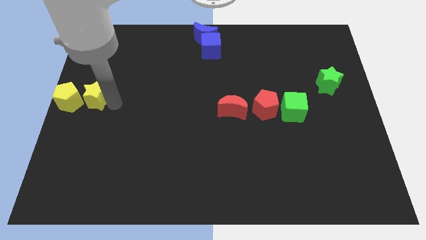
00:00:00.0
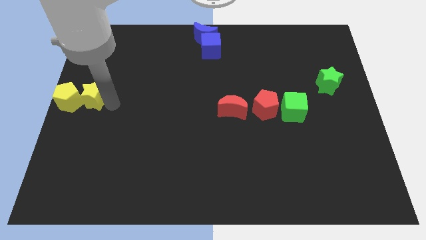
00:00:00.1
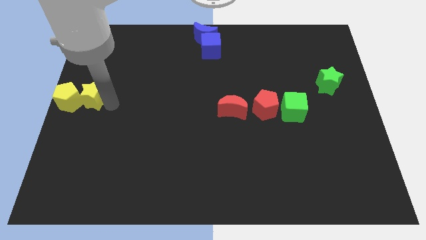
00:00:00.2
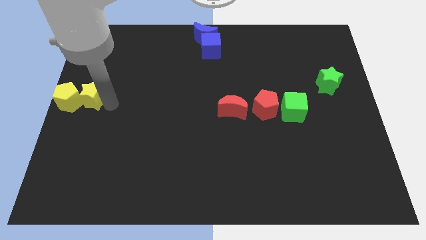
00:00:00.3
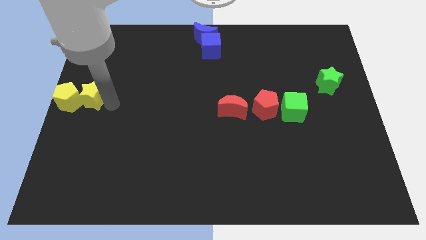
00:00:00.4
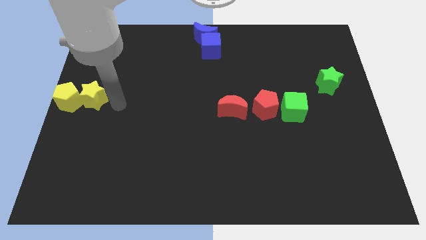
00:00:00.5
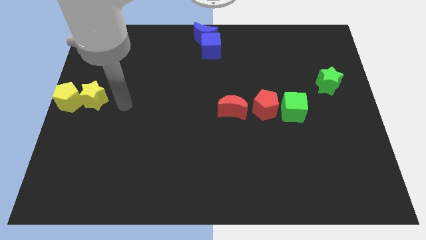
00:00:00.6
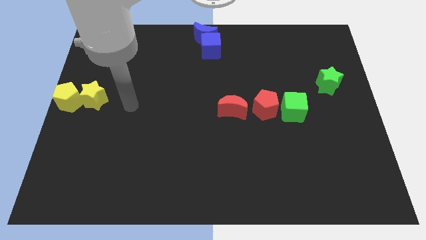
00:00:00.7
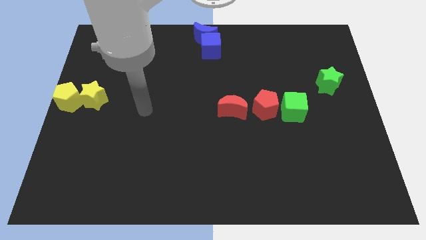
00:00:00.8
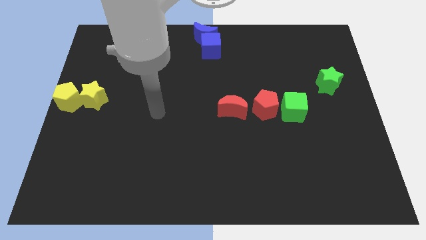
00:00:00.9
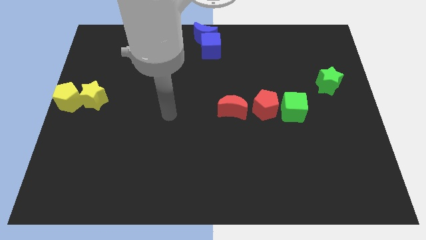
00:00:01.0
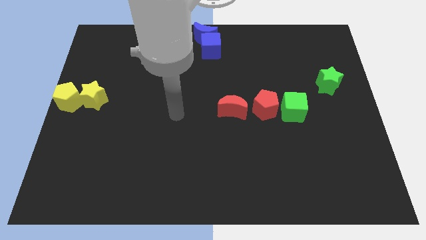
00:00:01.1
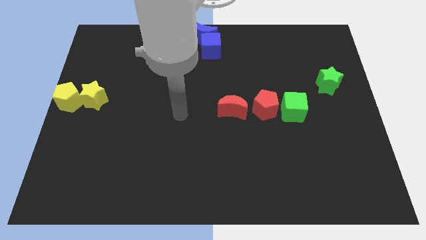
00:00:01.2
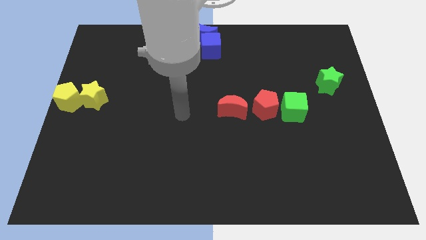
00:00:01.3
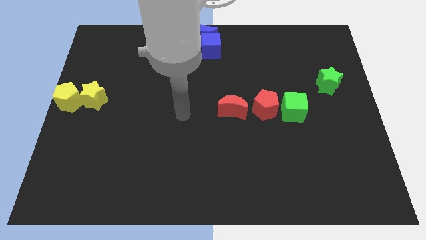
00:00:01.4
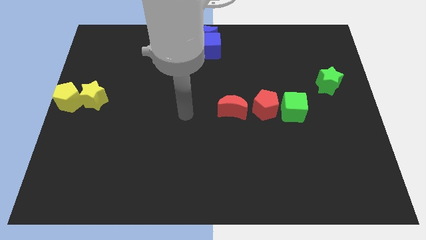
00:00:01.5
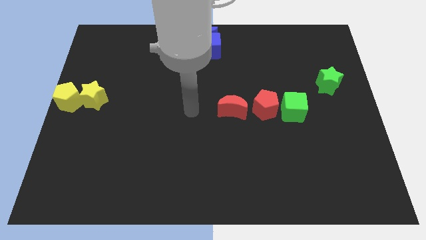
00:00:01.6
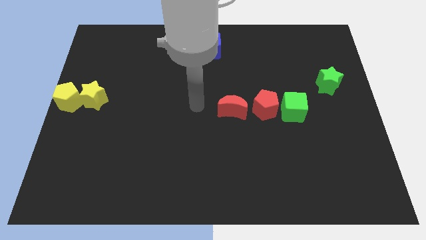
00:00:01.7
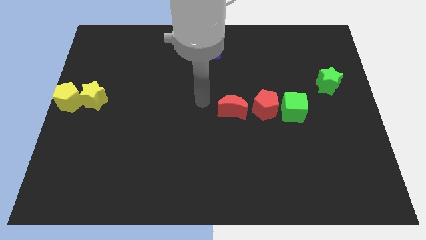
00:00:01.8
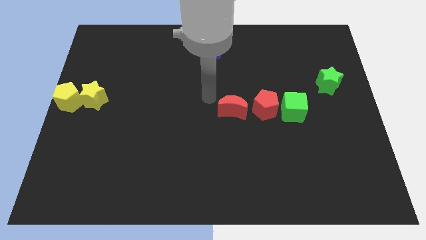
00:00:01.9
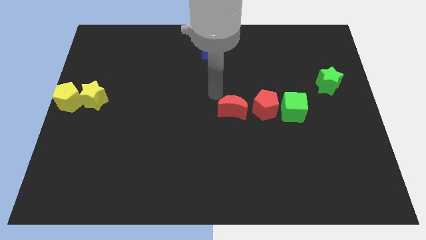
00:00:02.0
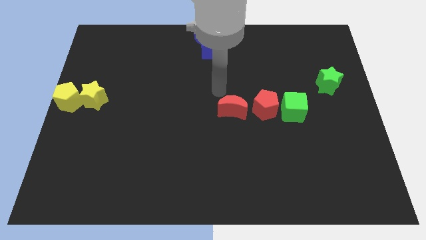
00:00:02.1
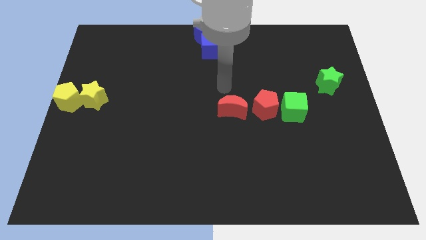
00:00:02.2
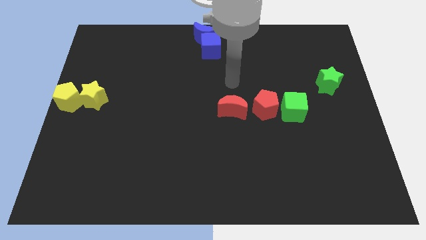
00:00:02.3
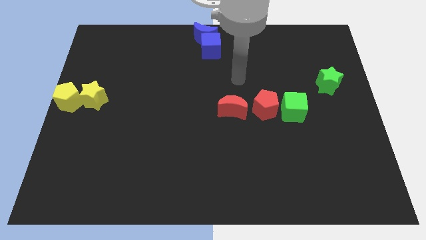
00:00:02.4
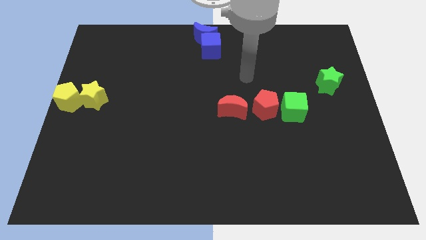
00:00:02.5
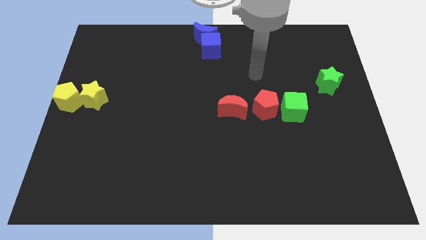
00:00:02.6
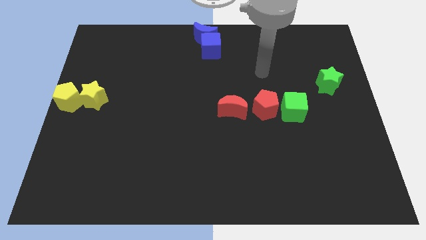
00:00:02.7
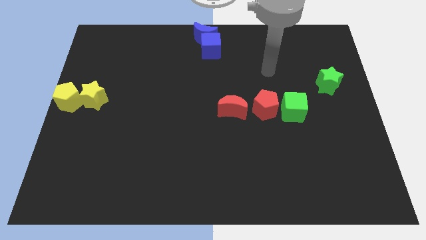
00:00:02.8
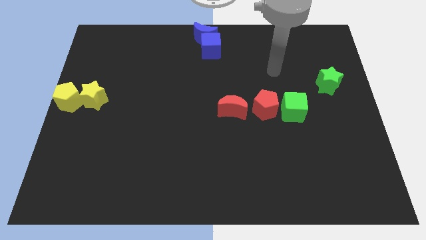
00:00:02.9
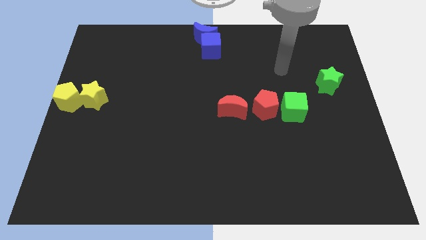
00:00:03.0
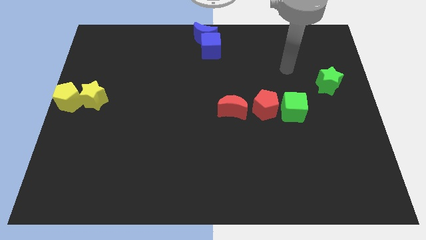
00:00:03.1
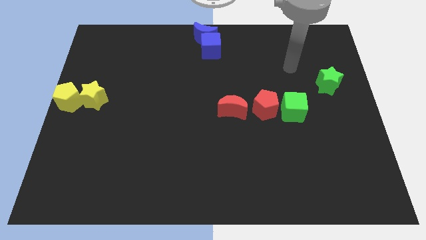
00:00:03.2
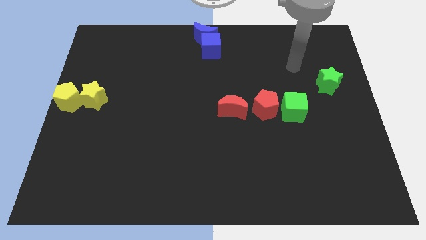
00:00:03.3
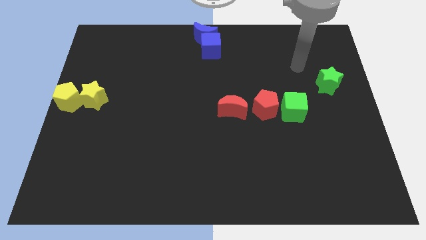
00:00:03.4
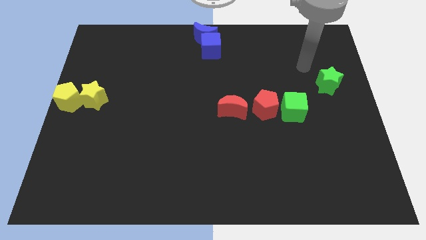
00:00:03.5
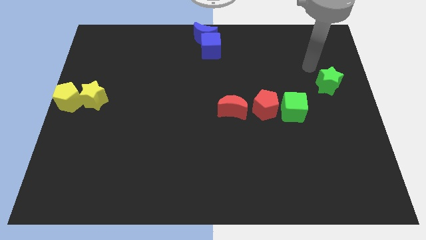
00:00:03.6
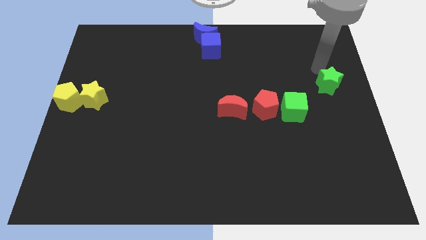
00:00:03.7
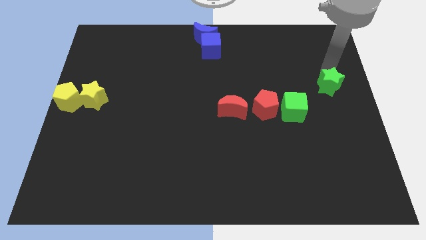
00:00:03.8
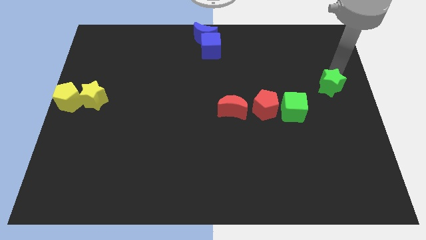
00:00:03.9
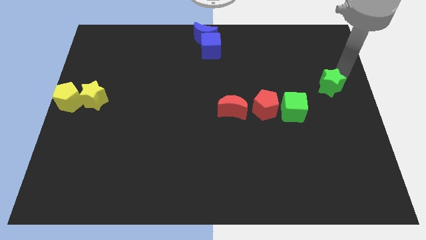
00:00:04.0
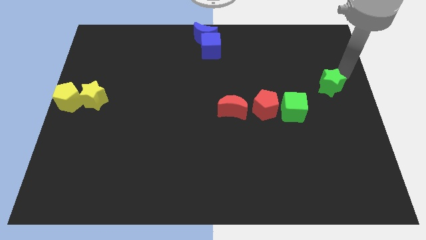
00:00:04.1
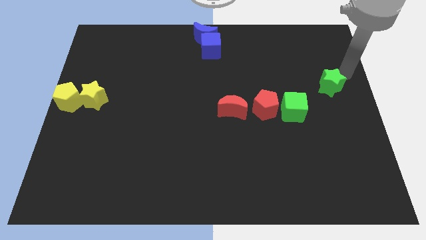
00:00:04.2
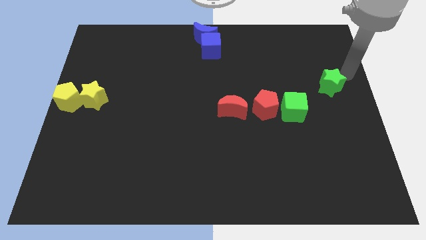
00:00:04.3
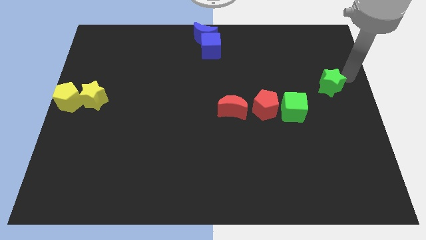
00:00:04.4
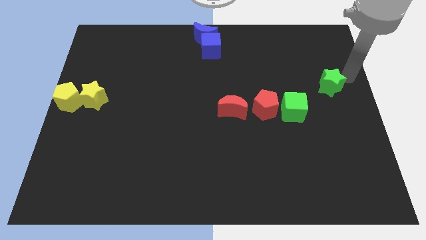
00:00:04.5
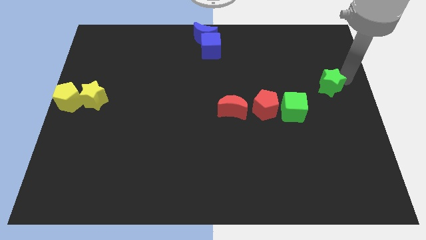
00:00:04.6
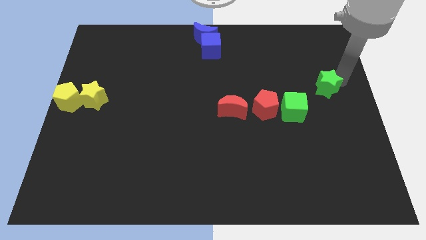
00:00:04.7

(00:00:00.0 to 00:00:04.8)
move your arm away from the yellow star

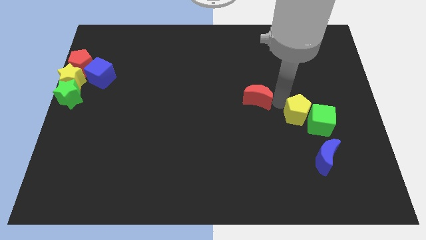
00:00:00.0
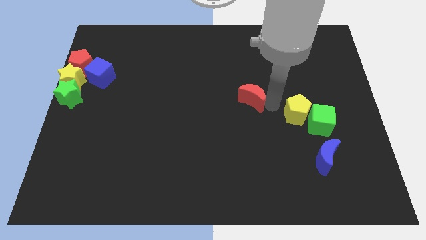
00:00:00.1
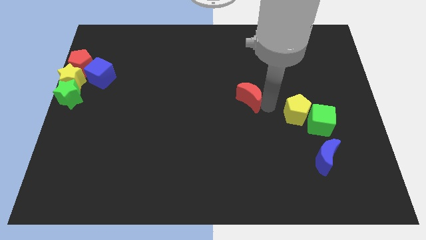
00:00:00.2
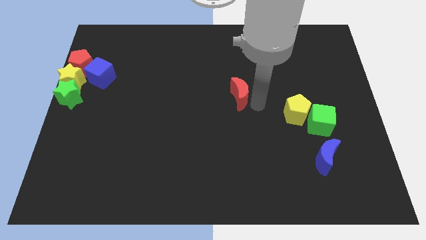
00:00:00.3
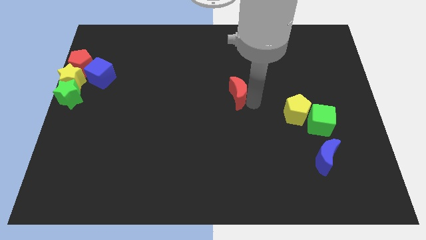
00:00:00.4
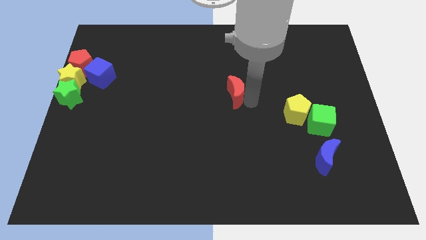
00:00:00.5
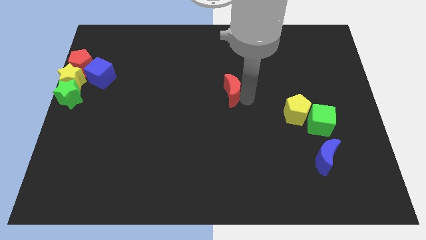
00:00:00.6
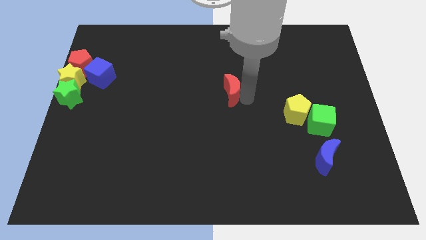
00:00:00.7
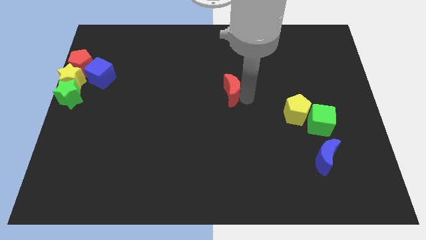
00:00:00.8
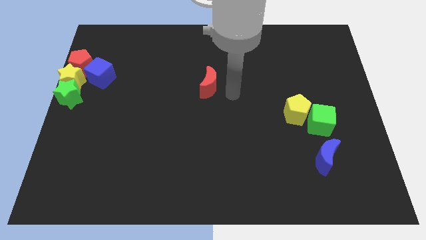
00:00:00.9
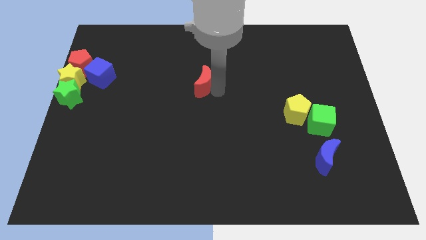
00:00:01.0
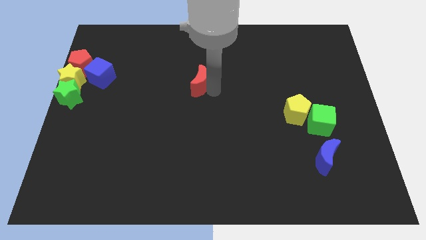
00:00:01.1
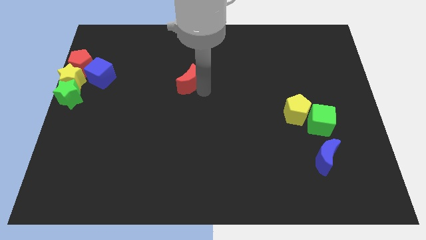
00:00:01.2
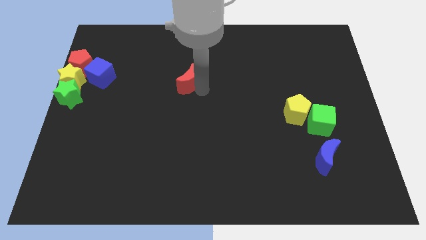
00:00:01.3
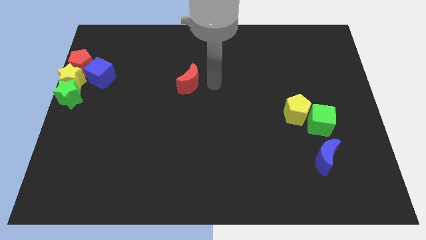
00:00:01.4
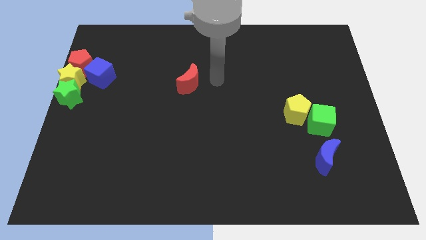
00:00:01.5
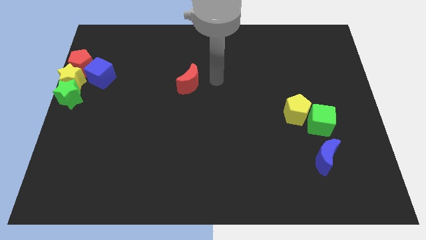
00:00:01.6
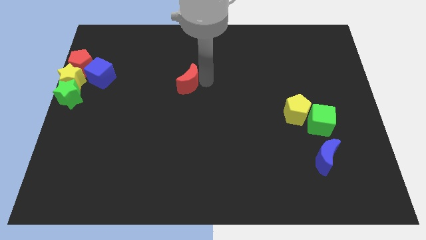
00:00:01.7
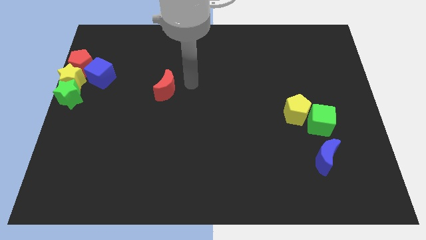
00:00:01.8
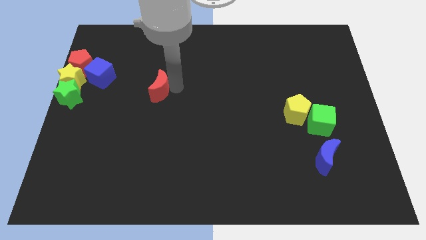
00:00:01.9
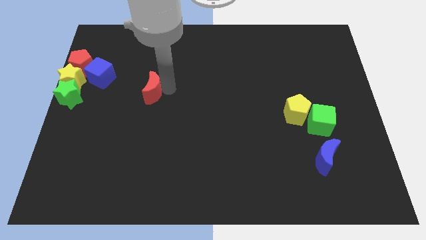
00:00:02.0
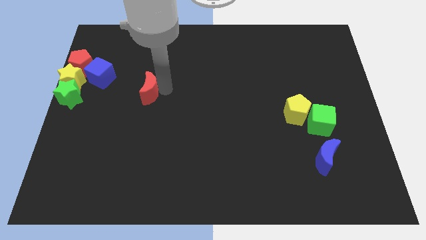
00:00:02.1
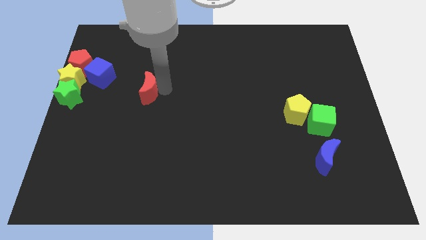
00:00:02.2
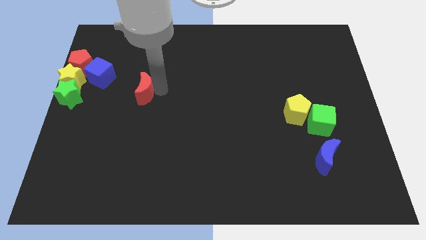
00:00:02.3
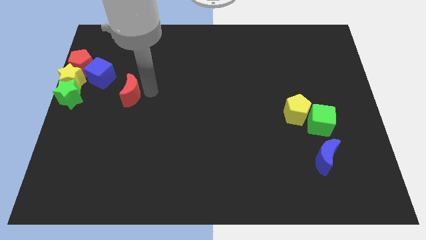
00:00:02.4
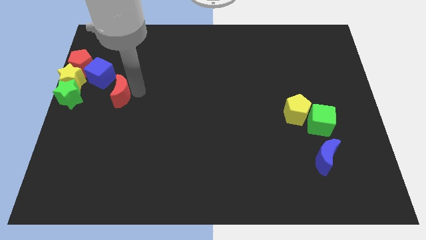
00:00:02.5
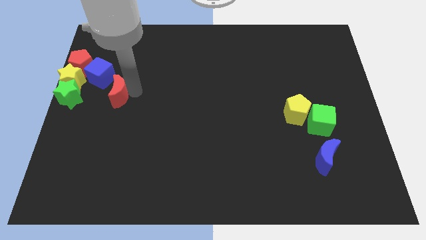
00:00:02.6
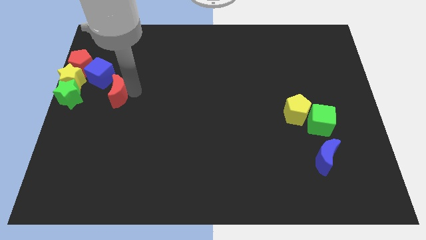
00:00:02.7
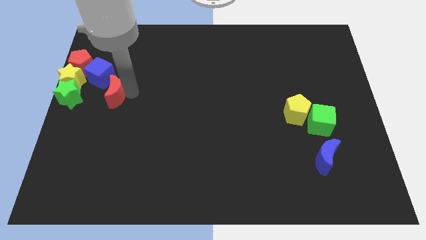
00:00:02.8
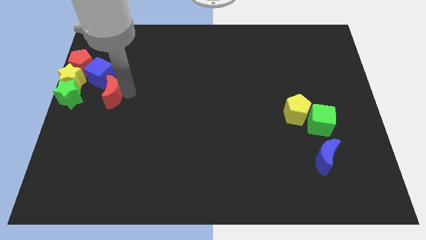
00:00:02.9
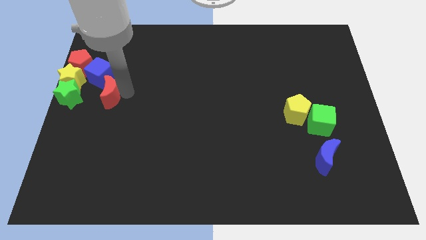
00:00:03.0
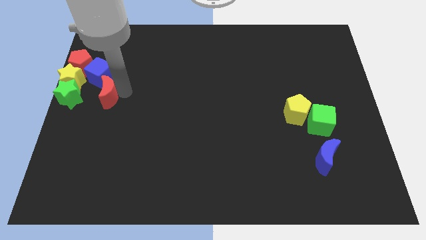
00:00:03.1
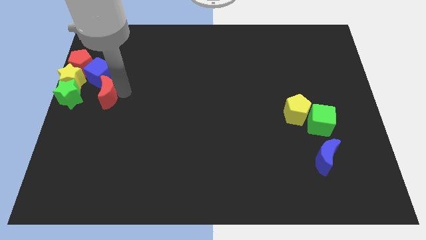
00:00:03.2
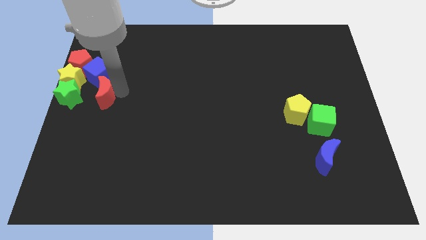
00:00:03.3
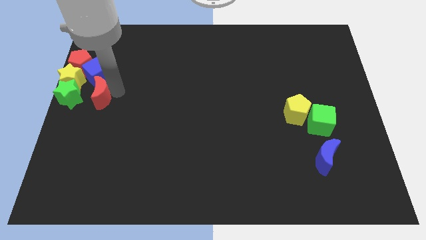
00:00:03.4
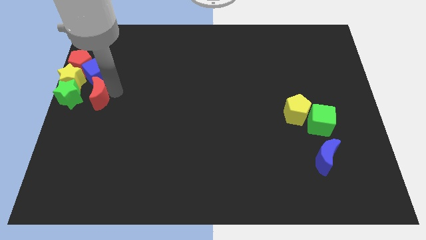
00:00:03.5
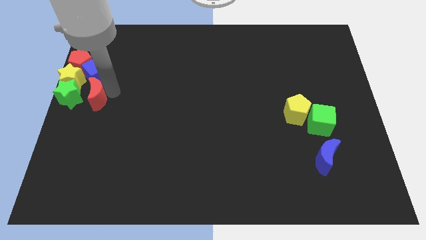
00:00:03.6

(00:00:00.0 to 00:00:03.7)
move the red crescent right to the green star

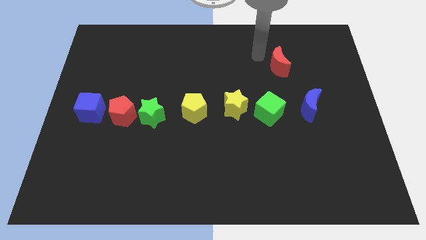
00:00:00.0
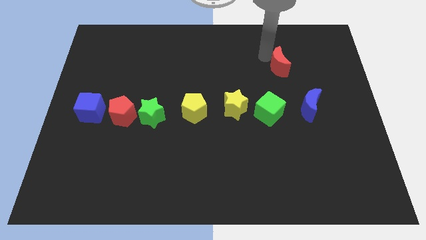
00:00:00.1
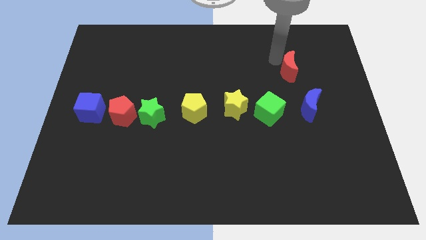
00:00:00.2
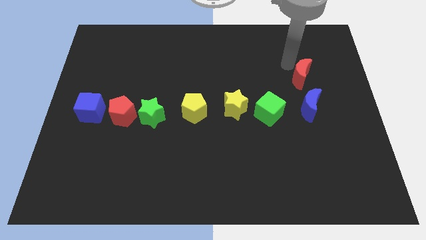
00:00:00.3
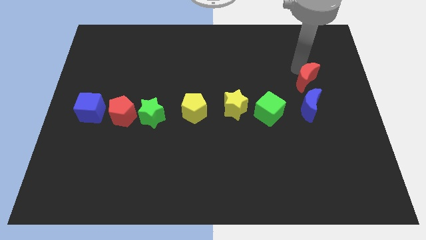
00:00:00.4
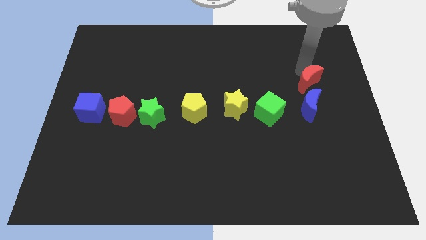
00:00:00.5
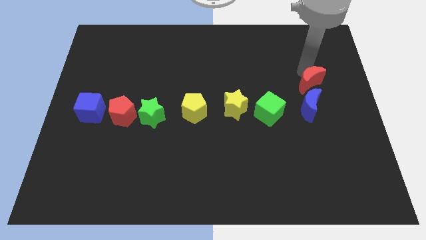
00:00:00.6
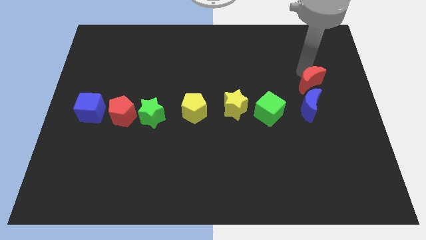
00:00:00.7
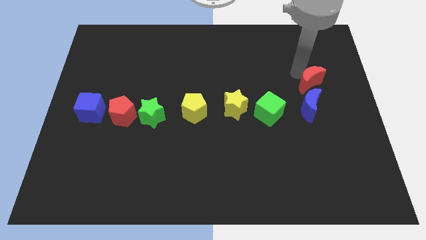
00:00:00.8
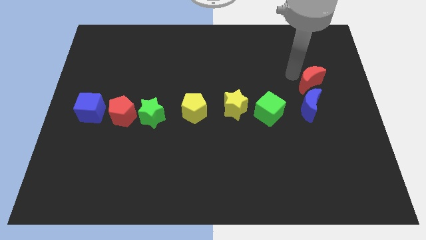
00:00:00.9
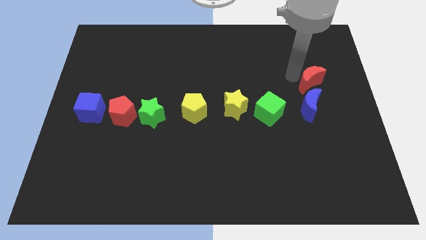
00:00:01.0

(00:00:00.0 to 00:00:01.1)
push the red crescent near the blue crescent
